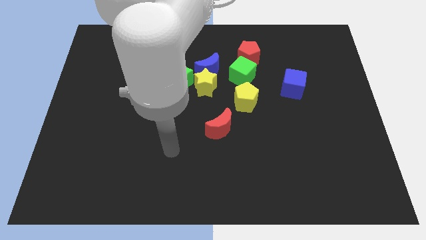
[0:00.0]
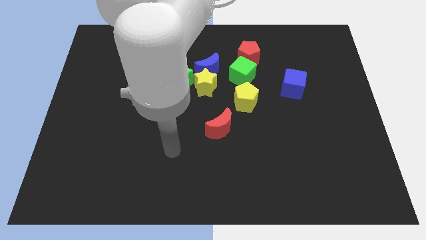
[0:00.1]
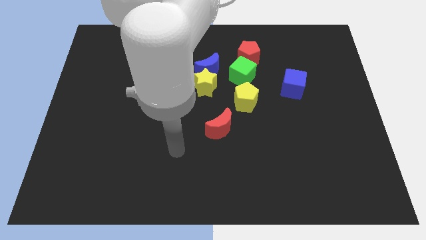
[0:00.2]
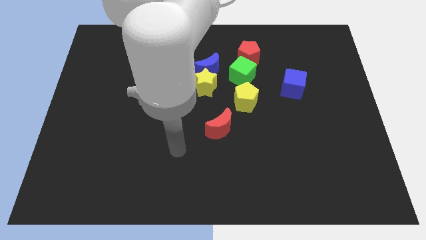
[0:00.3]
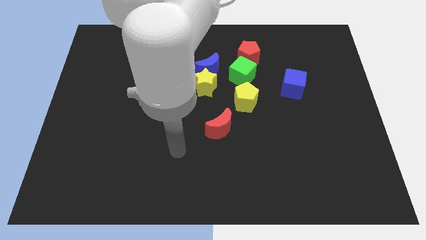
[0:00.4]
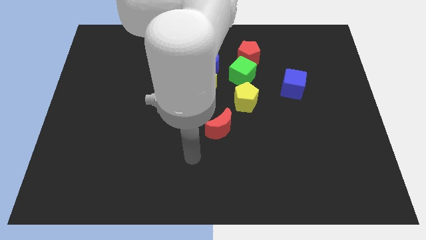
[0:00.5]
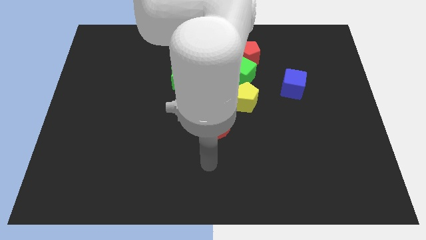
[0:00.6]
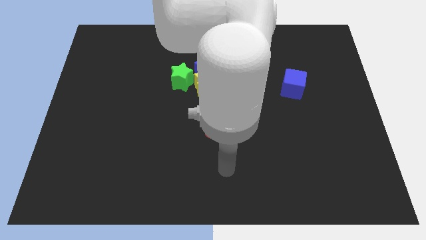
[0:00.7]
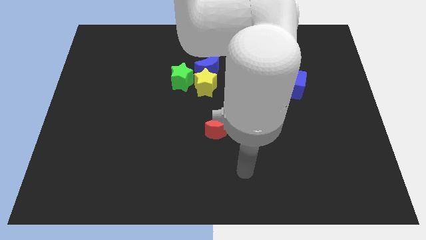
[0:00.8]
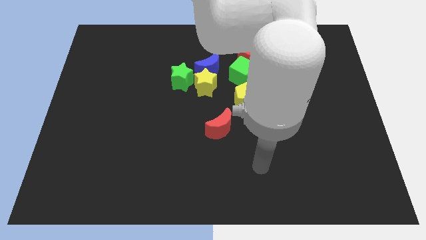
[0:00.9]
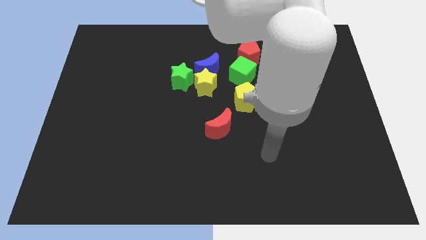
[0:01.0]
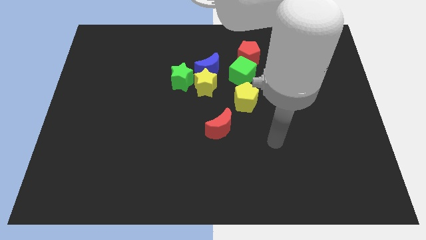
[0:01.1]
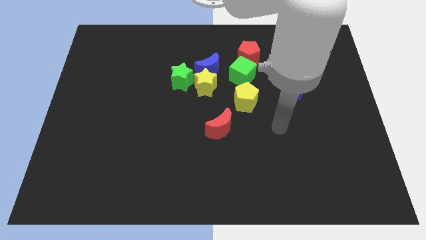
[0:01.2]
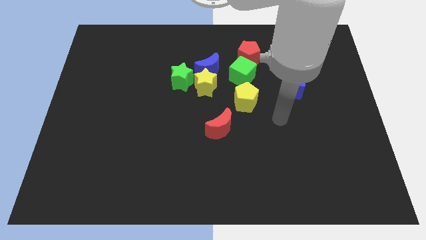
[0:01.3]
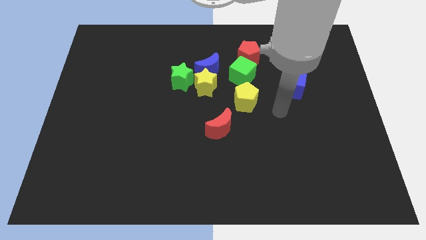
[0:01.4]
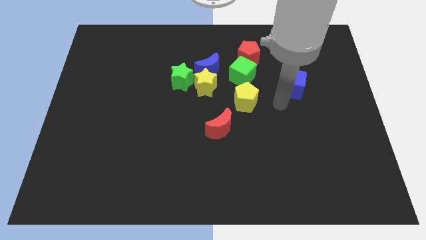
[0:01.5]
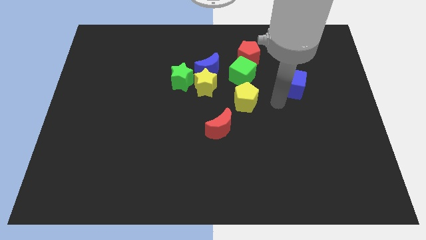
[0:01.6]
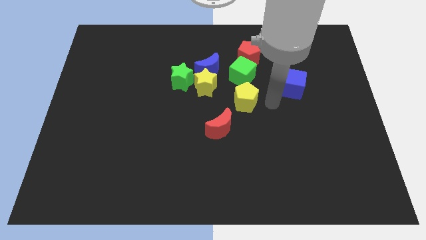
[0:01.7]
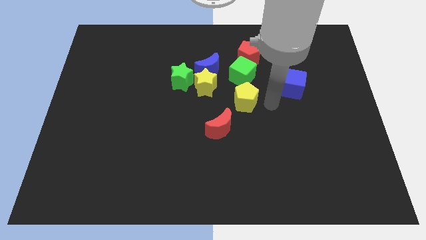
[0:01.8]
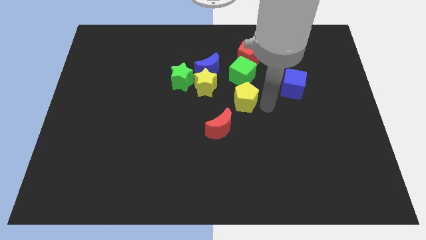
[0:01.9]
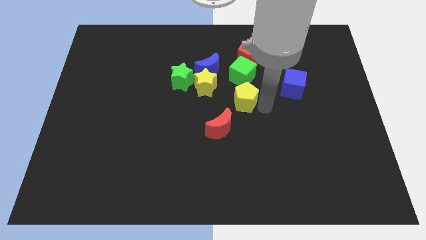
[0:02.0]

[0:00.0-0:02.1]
place your arm to the right of yellow pentagon

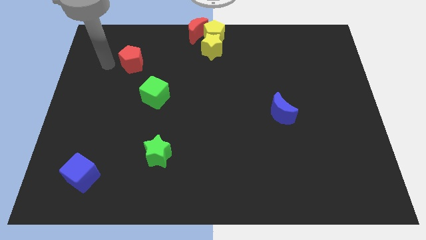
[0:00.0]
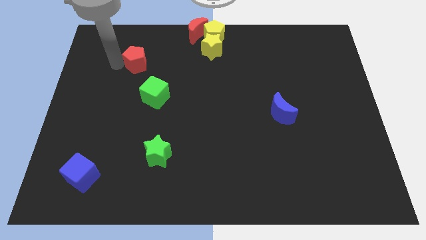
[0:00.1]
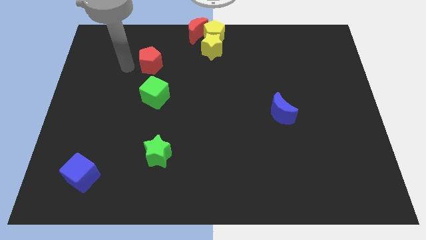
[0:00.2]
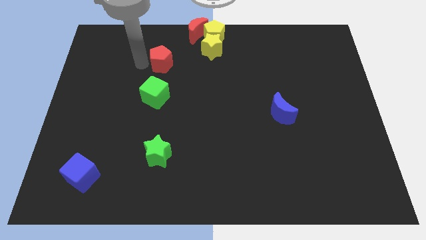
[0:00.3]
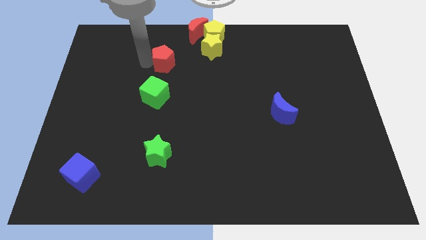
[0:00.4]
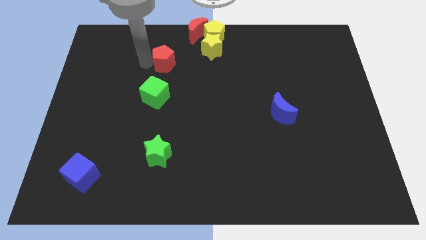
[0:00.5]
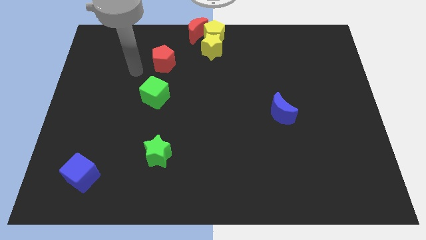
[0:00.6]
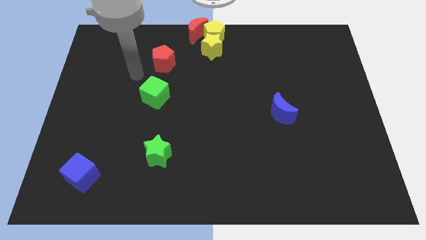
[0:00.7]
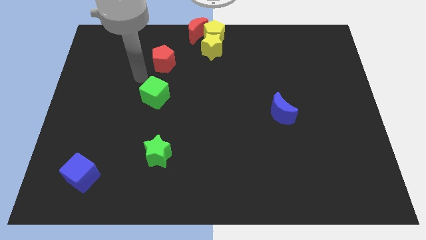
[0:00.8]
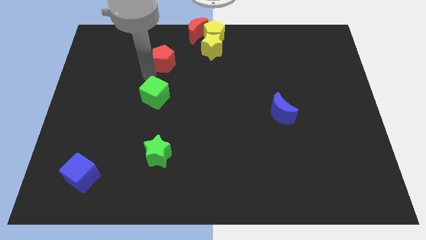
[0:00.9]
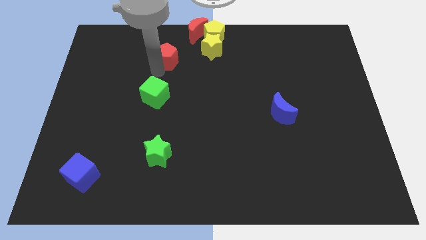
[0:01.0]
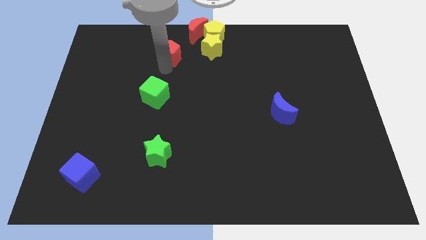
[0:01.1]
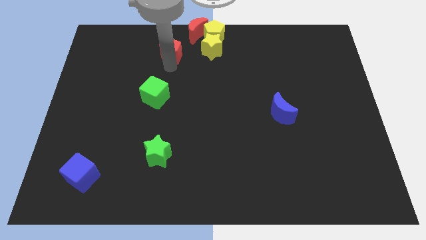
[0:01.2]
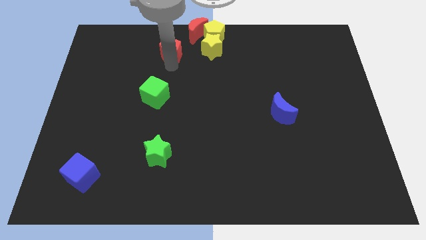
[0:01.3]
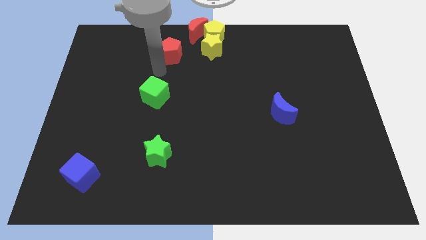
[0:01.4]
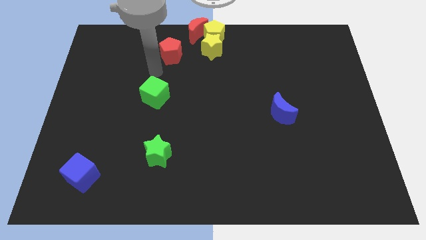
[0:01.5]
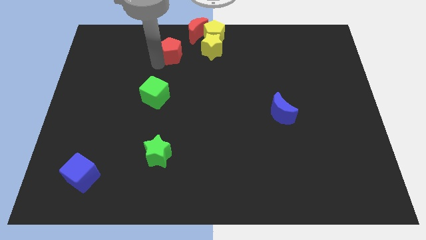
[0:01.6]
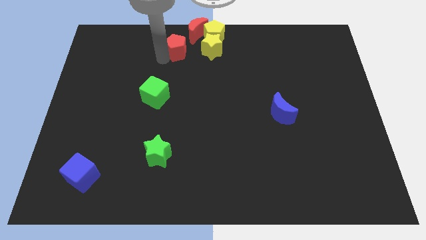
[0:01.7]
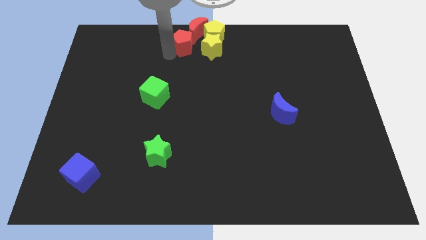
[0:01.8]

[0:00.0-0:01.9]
place red pentagon near red crescent

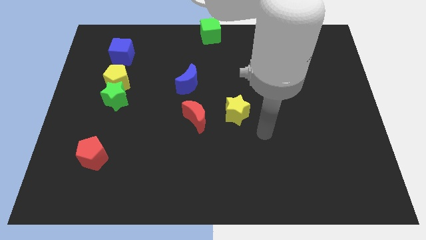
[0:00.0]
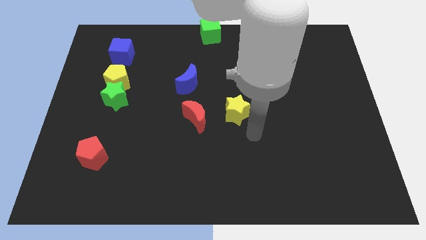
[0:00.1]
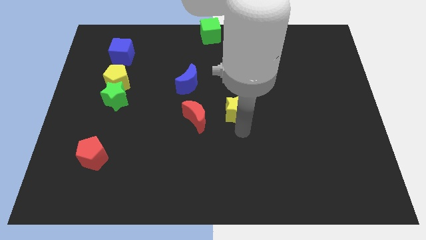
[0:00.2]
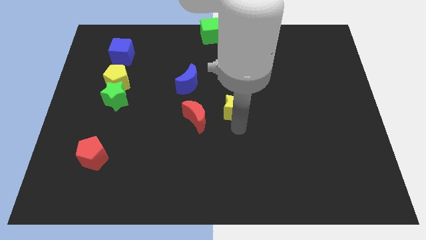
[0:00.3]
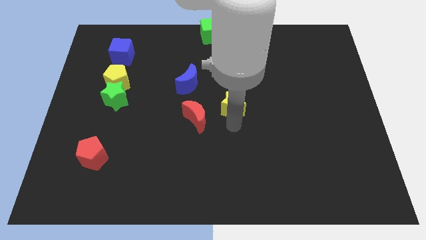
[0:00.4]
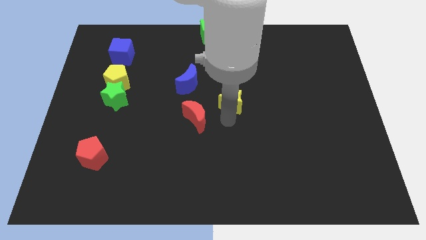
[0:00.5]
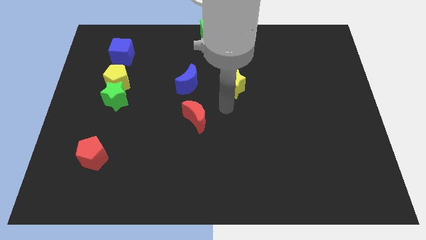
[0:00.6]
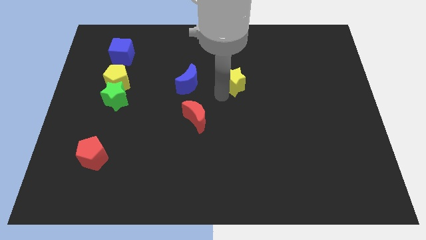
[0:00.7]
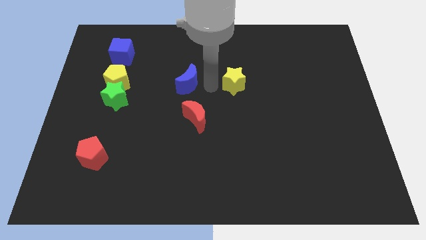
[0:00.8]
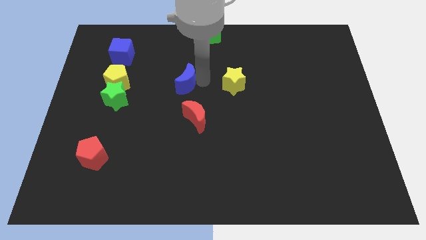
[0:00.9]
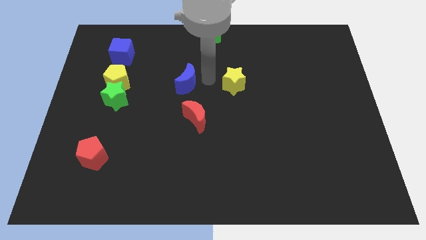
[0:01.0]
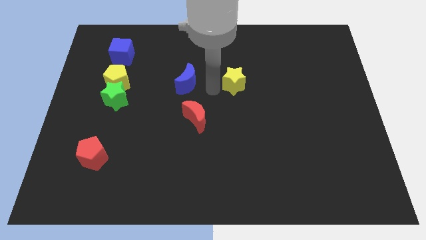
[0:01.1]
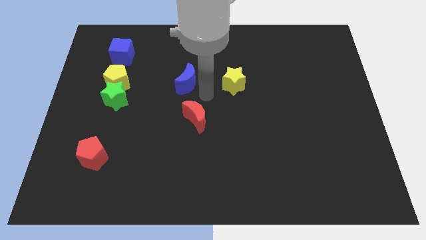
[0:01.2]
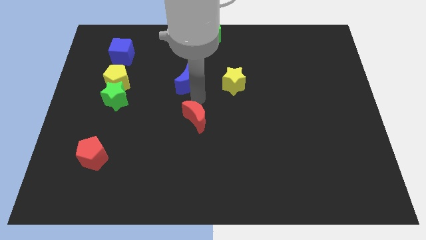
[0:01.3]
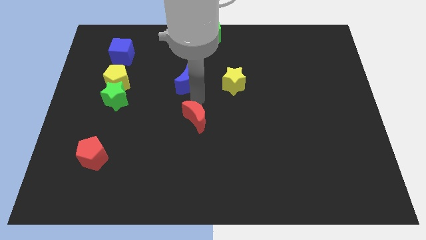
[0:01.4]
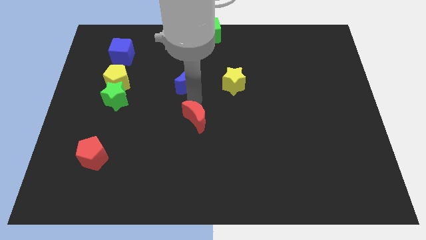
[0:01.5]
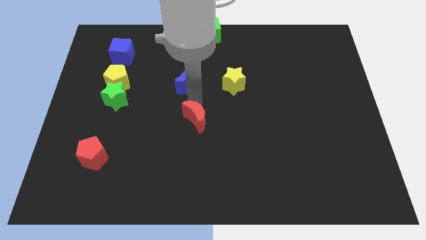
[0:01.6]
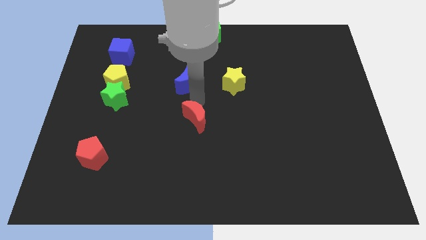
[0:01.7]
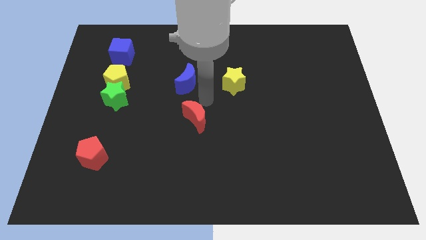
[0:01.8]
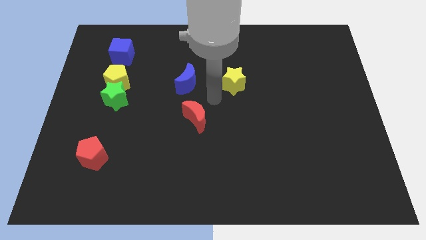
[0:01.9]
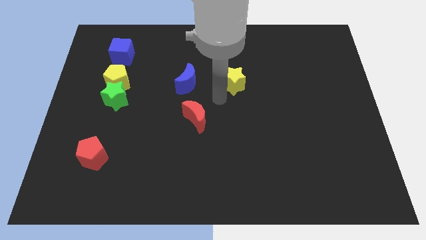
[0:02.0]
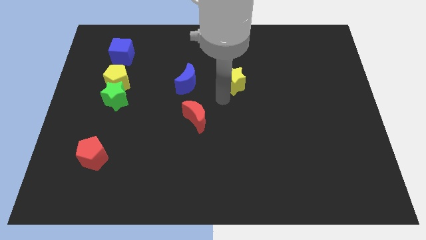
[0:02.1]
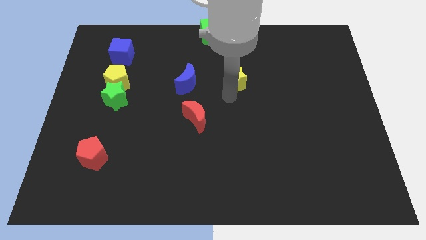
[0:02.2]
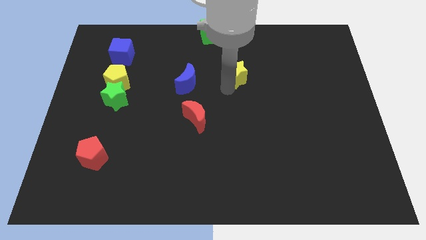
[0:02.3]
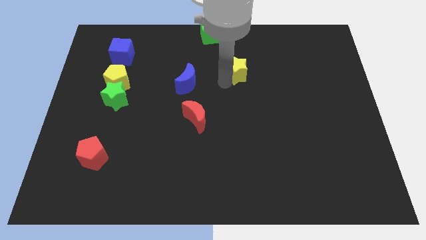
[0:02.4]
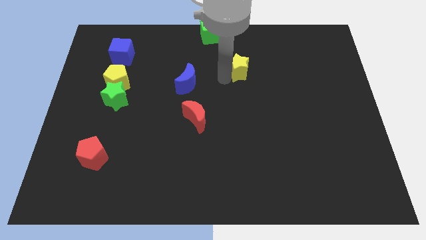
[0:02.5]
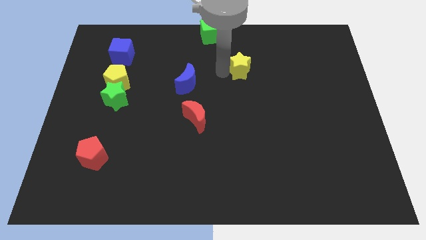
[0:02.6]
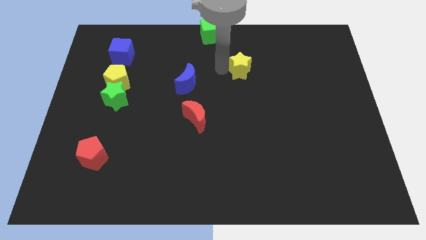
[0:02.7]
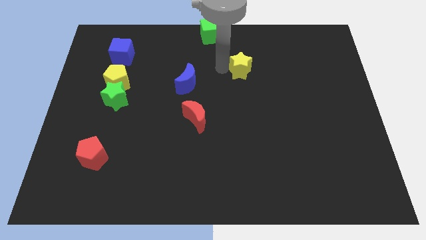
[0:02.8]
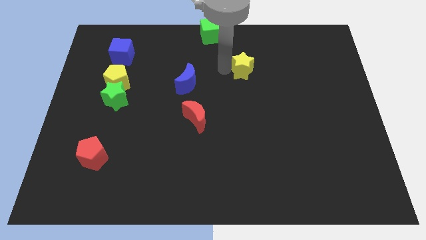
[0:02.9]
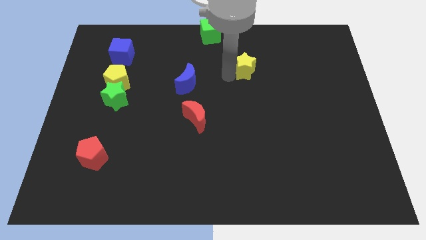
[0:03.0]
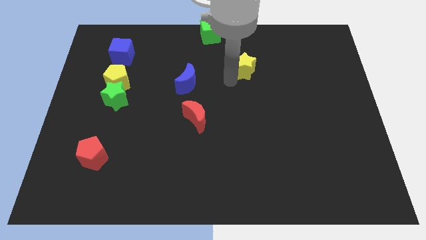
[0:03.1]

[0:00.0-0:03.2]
push the yellow star diagonally to green cube

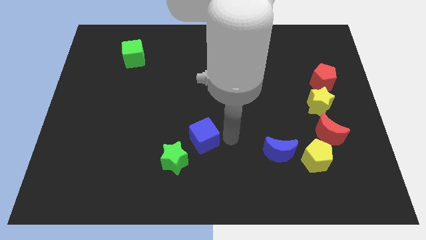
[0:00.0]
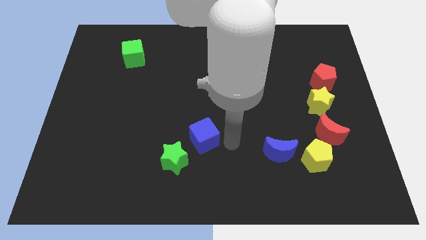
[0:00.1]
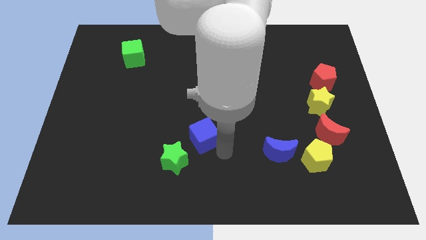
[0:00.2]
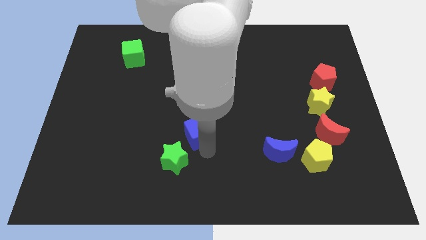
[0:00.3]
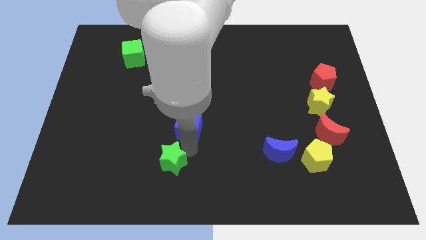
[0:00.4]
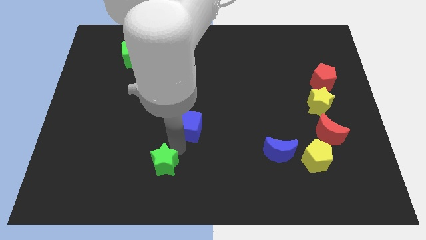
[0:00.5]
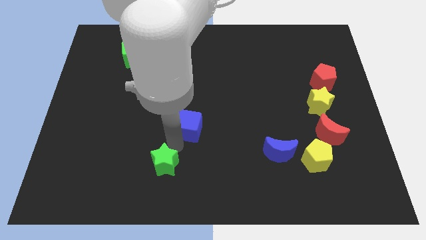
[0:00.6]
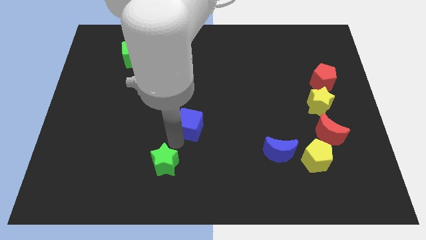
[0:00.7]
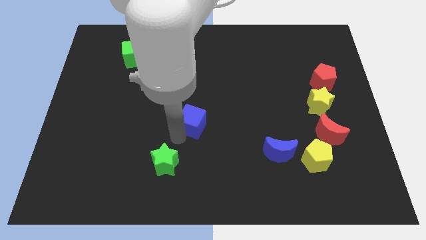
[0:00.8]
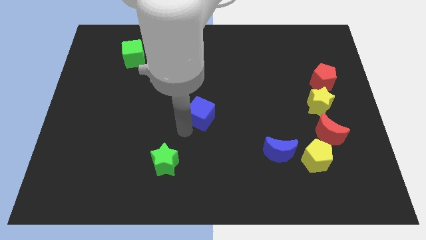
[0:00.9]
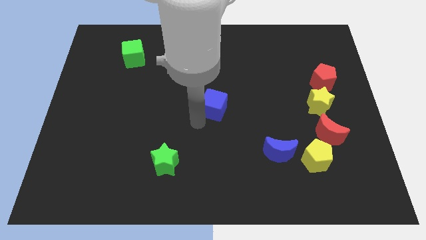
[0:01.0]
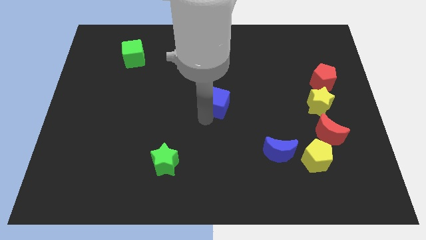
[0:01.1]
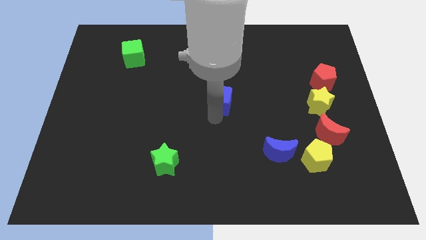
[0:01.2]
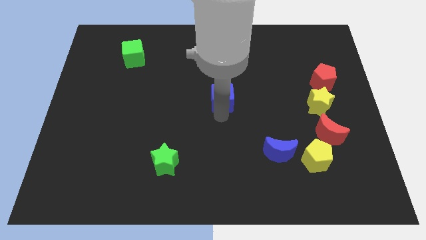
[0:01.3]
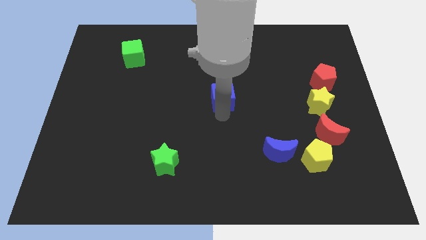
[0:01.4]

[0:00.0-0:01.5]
push the blue cube to the center of the board

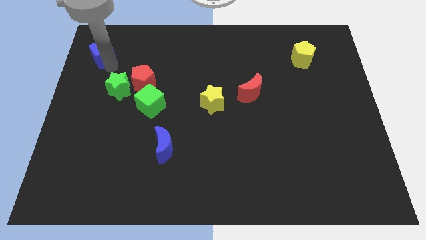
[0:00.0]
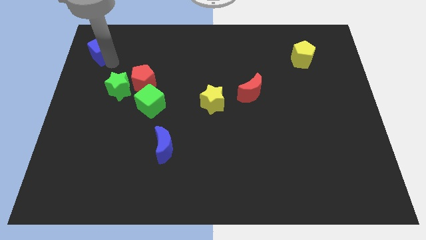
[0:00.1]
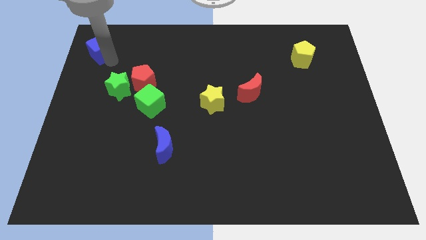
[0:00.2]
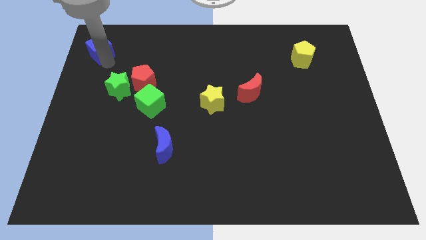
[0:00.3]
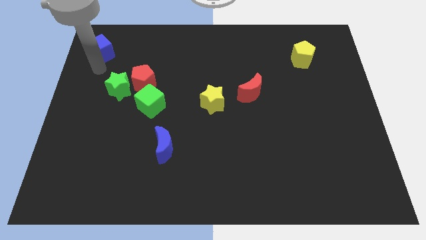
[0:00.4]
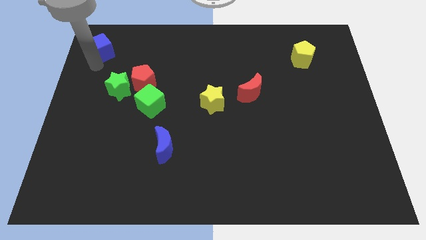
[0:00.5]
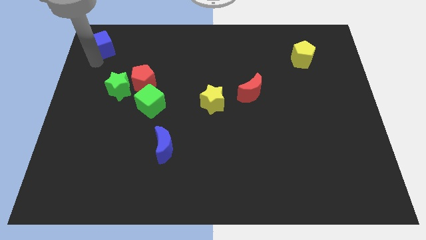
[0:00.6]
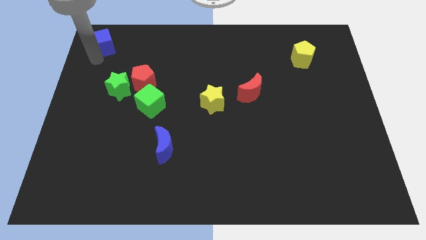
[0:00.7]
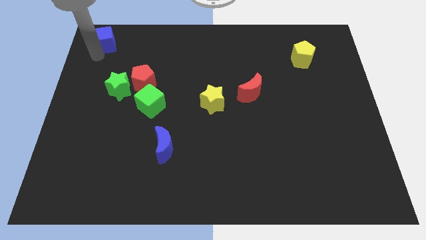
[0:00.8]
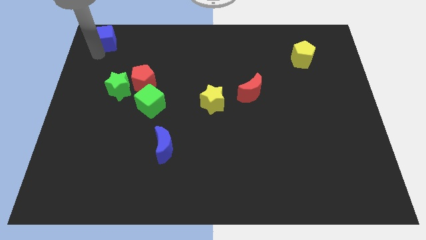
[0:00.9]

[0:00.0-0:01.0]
move blue cube at top left corner
